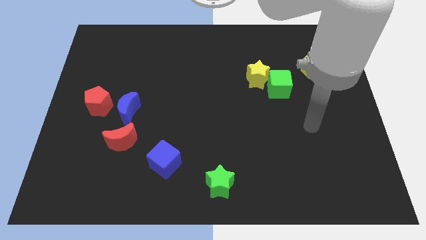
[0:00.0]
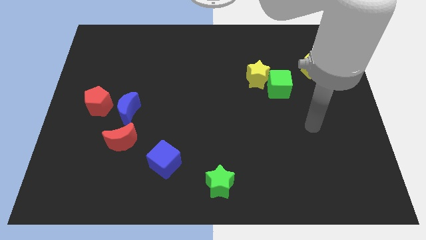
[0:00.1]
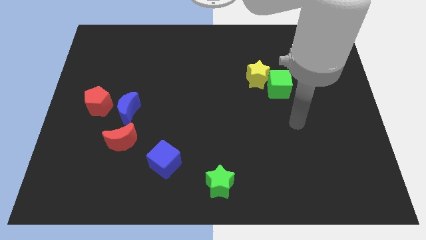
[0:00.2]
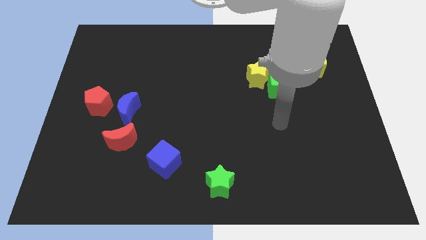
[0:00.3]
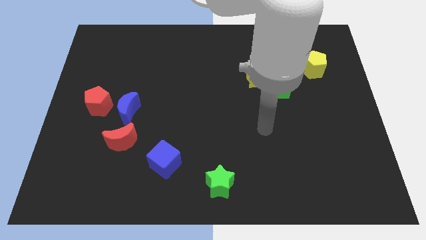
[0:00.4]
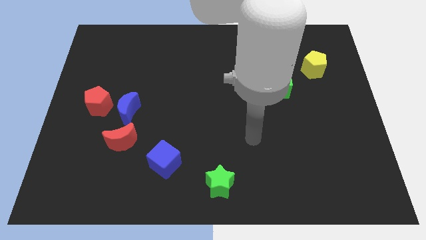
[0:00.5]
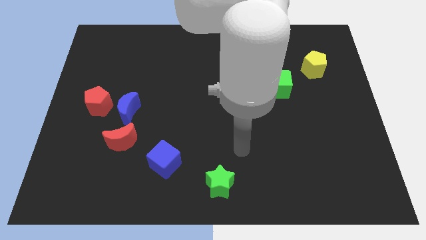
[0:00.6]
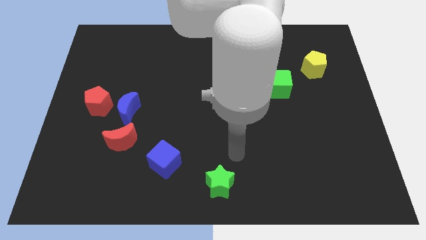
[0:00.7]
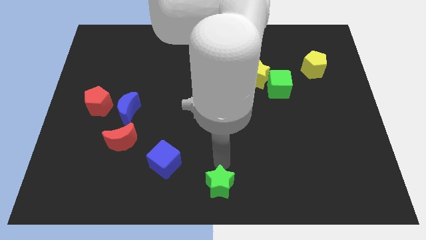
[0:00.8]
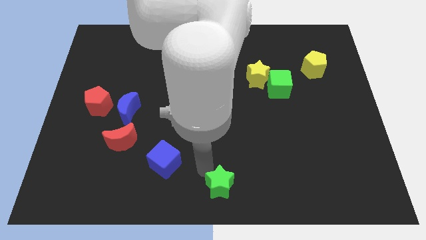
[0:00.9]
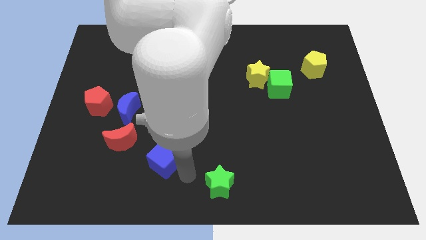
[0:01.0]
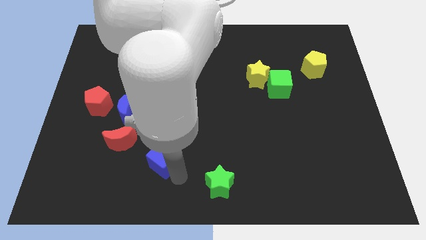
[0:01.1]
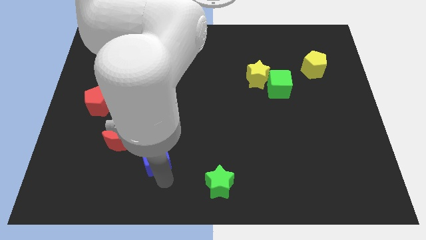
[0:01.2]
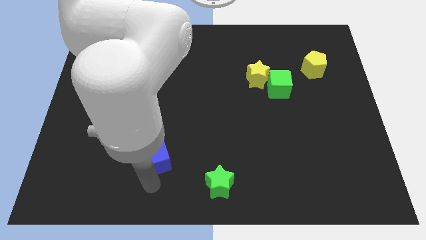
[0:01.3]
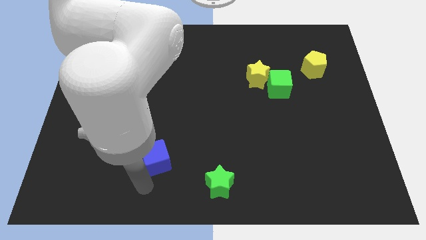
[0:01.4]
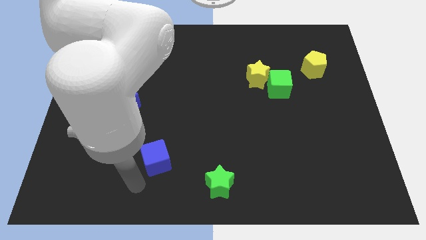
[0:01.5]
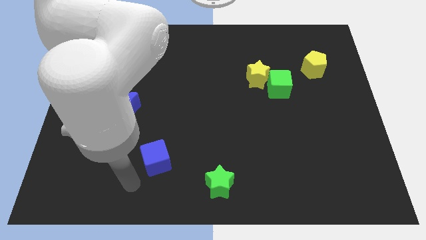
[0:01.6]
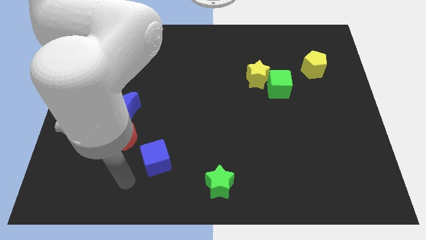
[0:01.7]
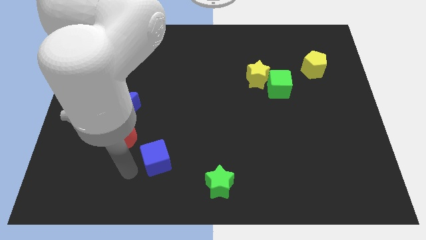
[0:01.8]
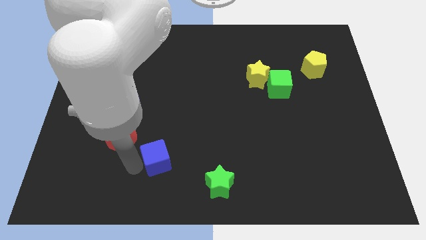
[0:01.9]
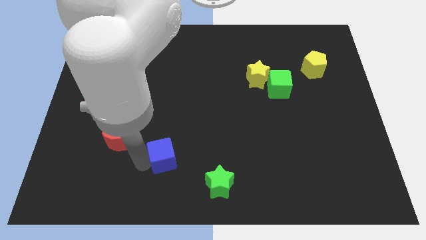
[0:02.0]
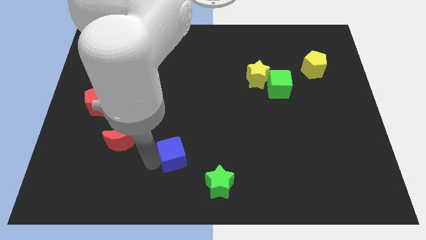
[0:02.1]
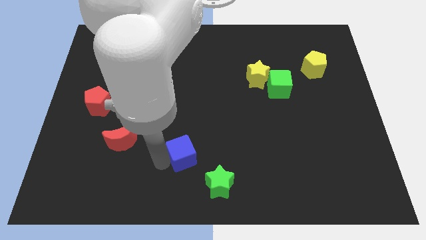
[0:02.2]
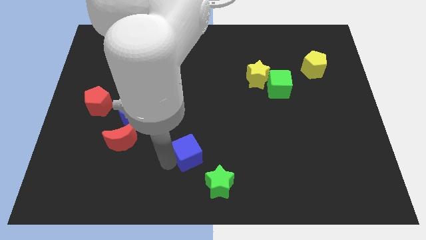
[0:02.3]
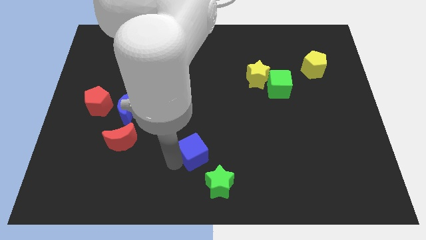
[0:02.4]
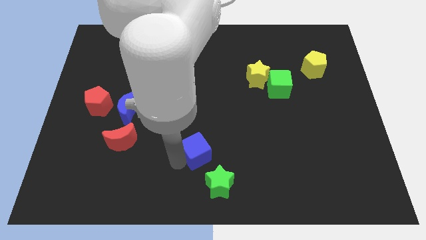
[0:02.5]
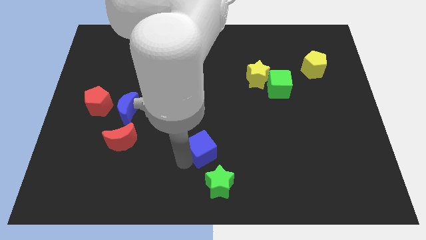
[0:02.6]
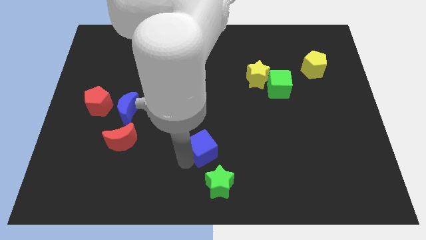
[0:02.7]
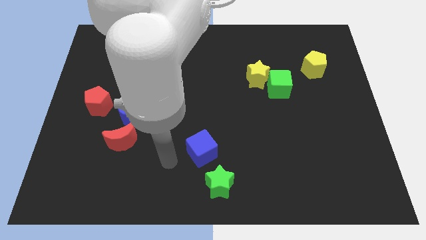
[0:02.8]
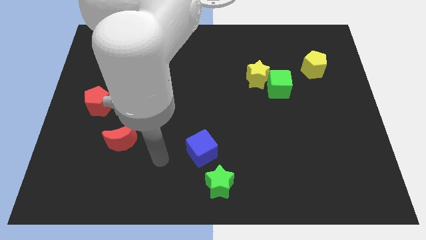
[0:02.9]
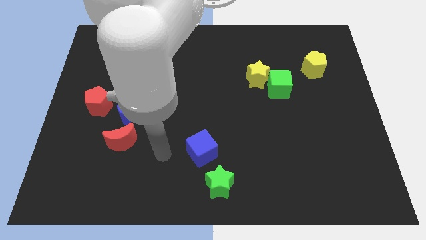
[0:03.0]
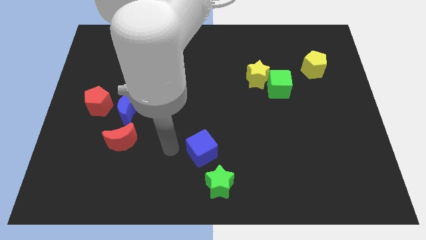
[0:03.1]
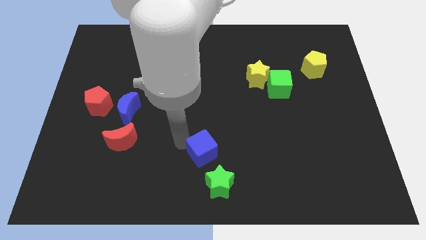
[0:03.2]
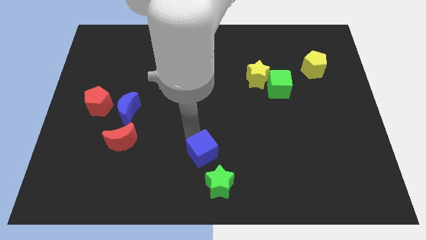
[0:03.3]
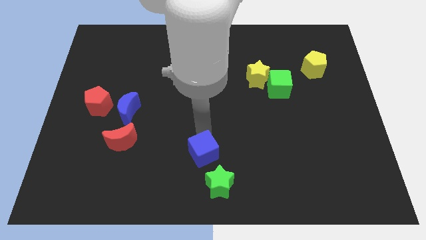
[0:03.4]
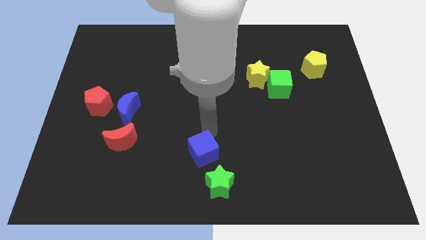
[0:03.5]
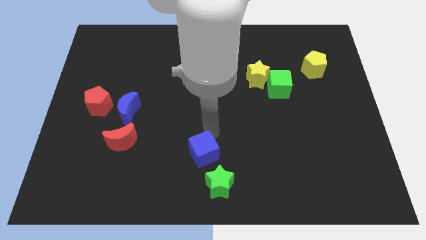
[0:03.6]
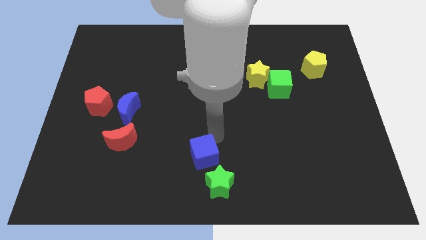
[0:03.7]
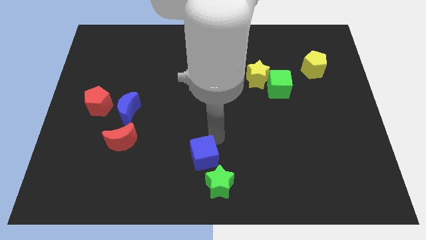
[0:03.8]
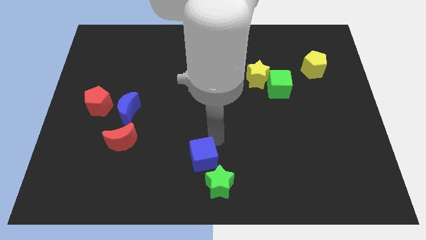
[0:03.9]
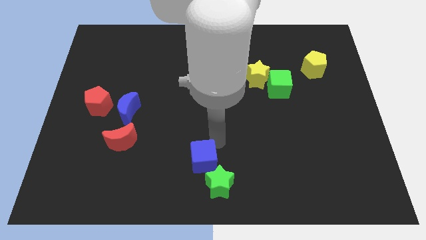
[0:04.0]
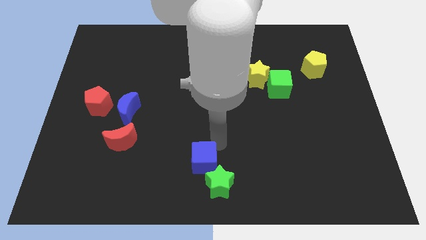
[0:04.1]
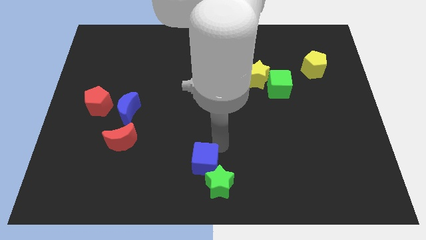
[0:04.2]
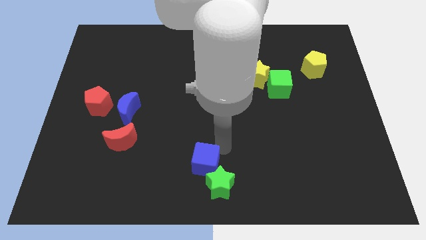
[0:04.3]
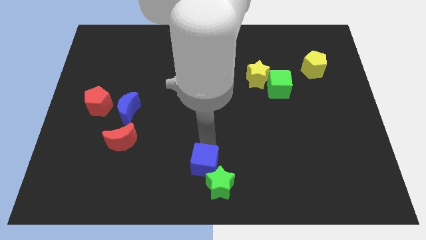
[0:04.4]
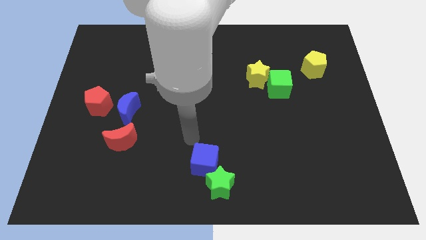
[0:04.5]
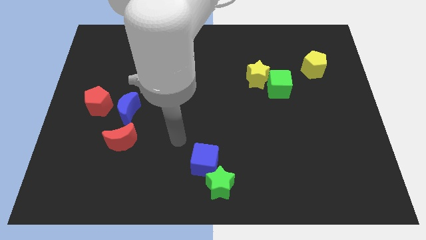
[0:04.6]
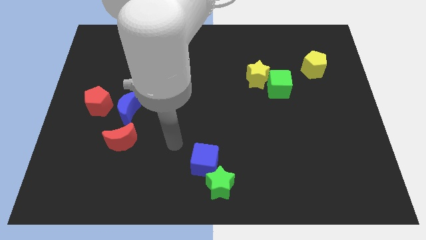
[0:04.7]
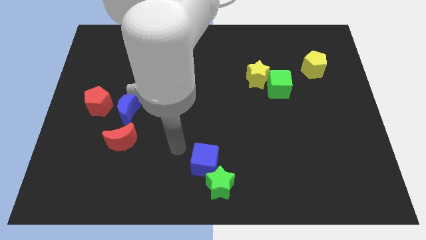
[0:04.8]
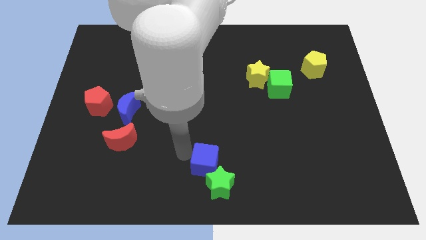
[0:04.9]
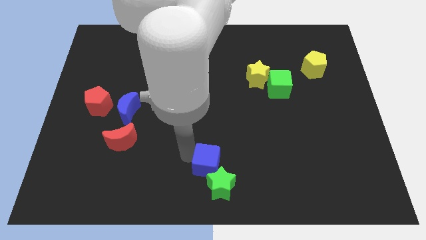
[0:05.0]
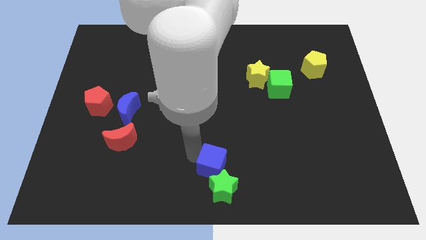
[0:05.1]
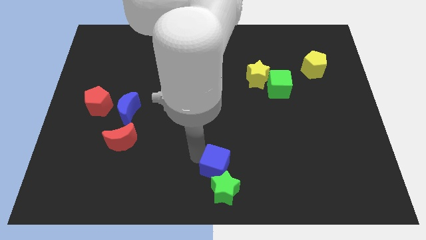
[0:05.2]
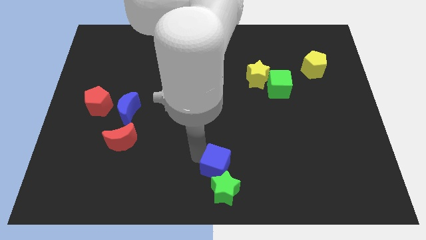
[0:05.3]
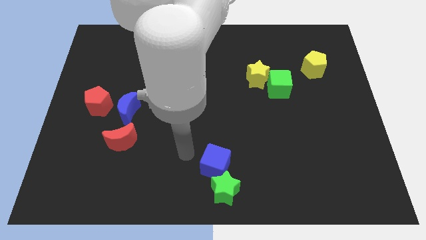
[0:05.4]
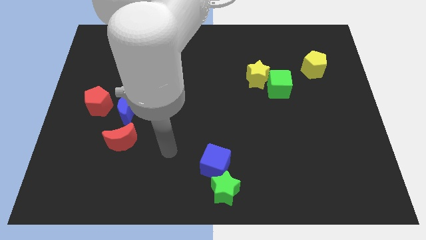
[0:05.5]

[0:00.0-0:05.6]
push the blue cube into the green star

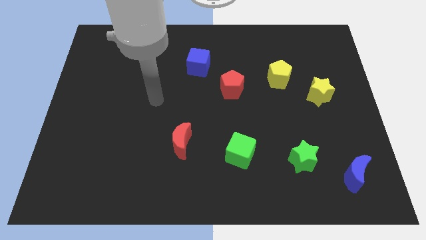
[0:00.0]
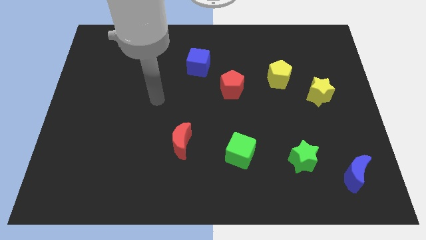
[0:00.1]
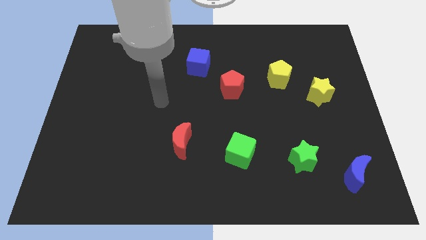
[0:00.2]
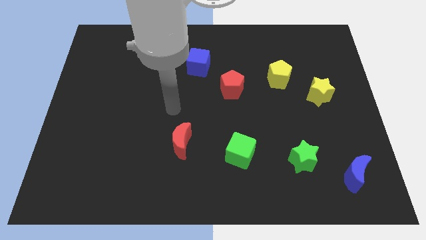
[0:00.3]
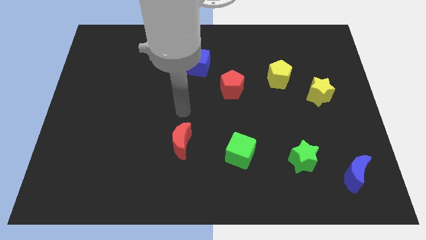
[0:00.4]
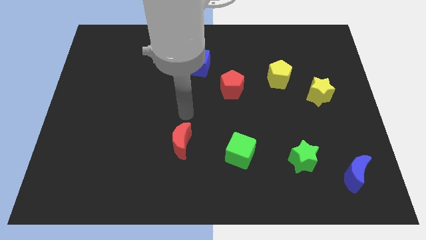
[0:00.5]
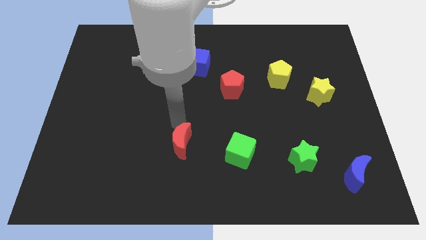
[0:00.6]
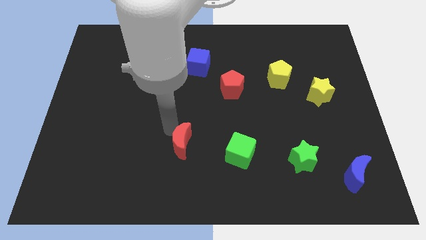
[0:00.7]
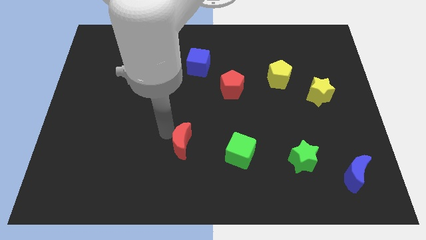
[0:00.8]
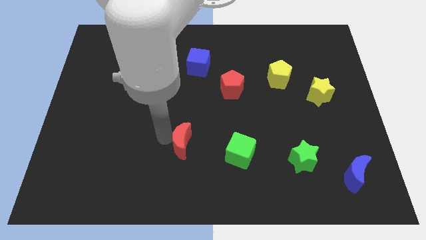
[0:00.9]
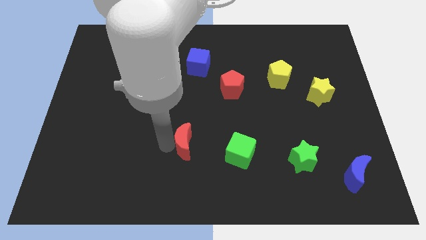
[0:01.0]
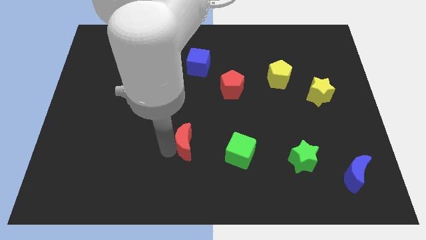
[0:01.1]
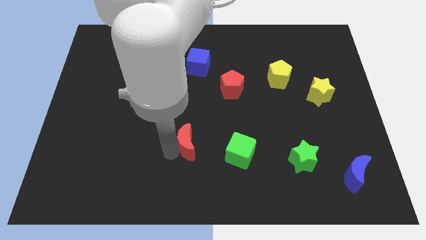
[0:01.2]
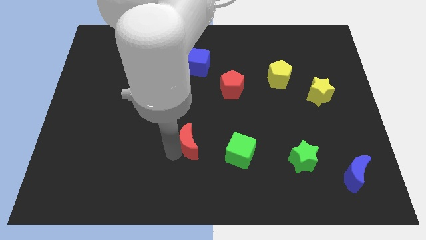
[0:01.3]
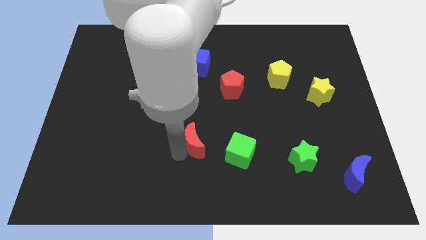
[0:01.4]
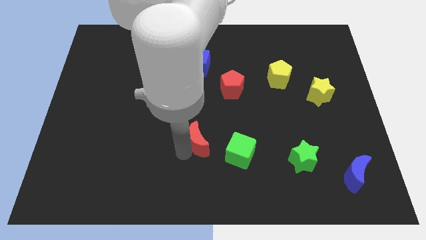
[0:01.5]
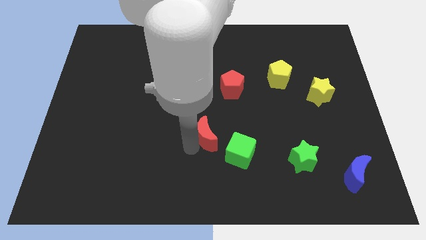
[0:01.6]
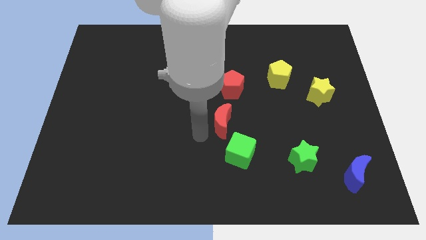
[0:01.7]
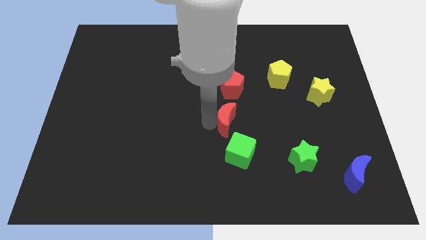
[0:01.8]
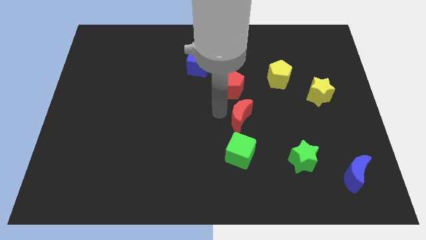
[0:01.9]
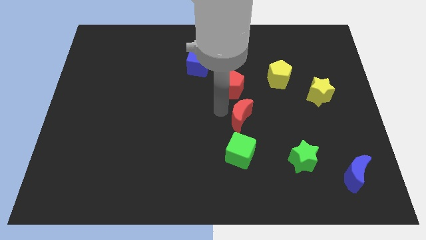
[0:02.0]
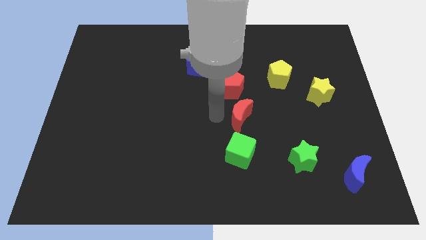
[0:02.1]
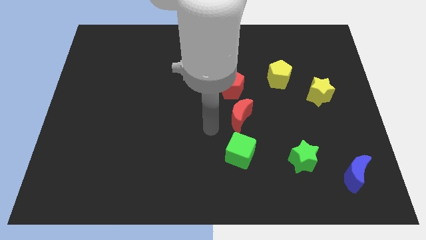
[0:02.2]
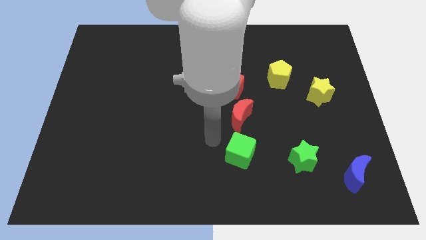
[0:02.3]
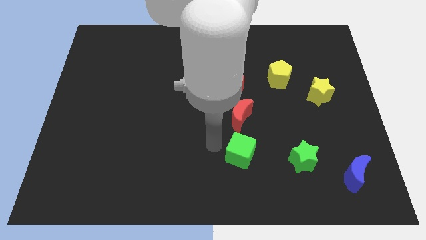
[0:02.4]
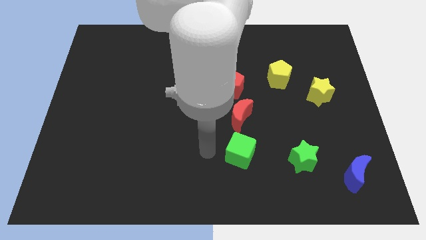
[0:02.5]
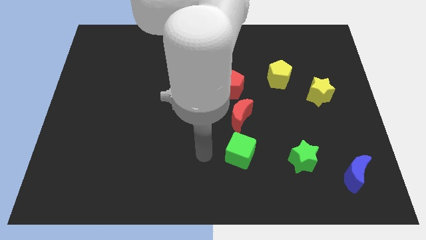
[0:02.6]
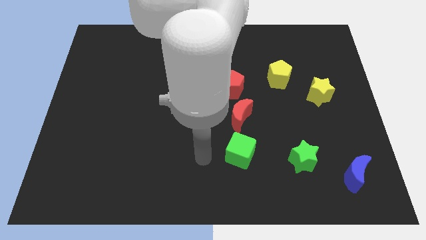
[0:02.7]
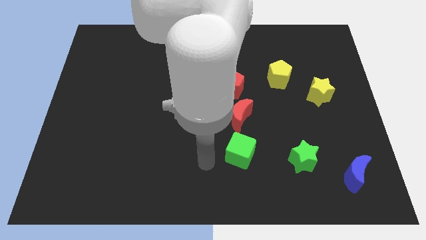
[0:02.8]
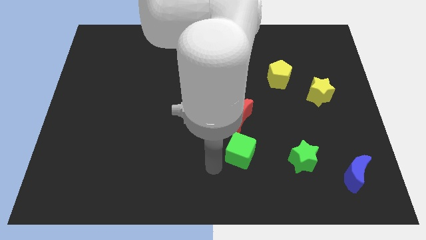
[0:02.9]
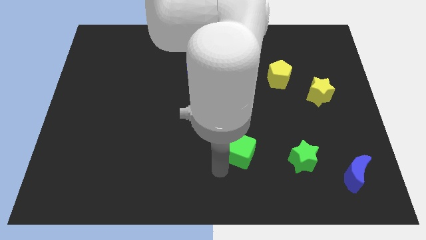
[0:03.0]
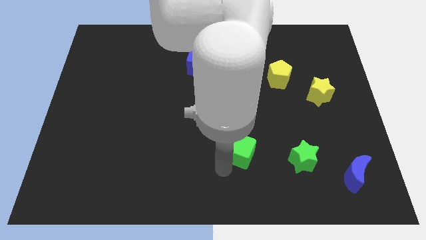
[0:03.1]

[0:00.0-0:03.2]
place the red crescent in between the red pentagon and green cube
